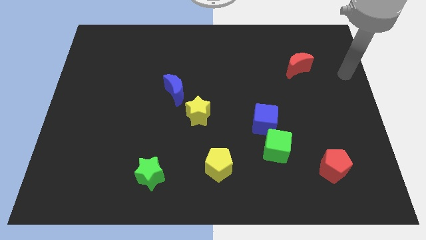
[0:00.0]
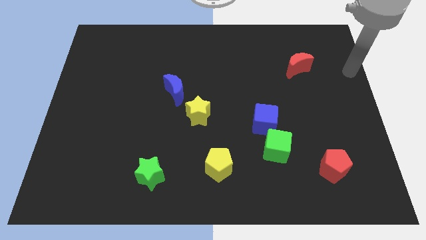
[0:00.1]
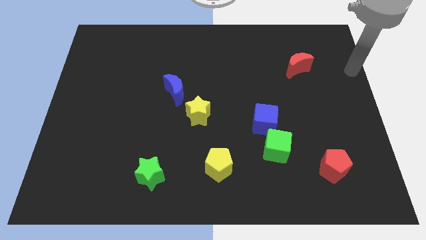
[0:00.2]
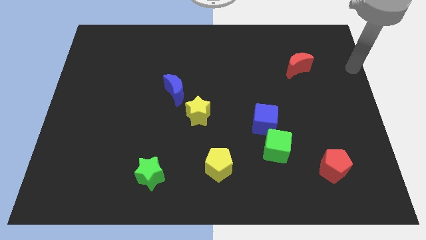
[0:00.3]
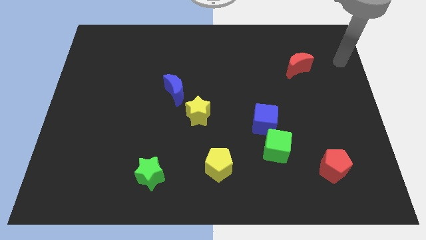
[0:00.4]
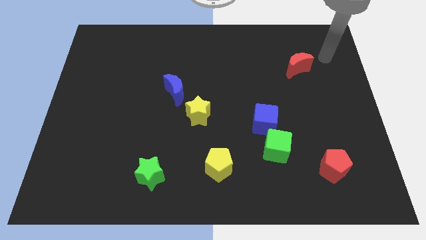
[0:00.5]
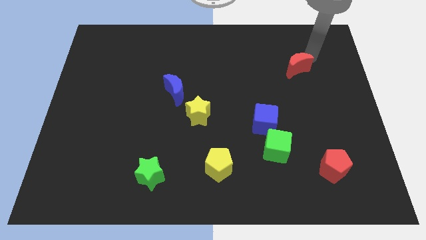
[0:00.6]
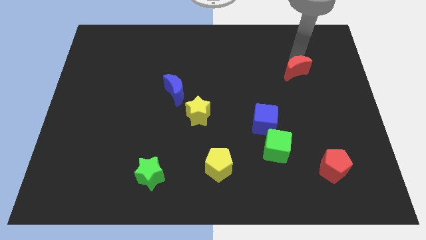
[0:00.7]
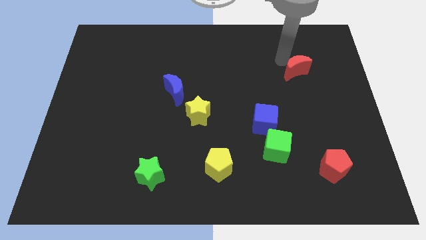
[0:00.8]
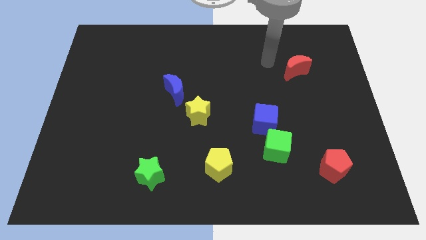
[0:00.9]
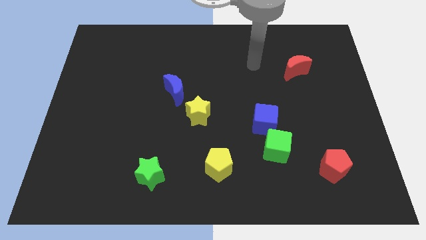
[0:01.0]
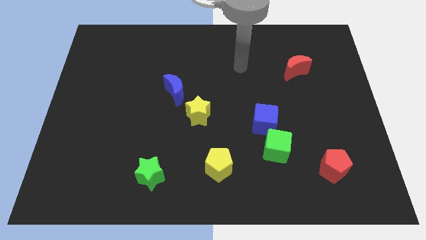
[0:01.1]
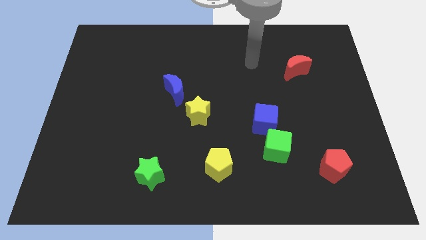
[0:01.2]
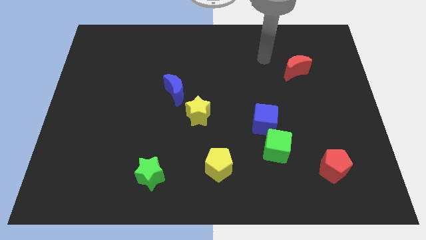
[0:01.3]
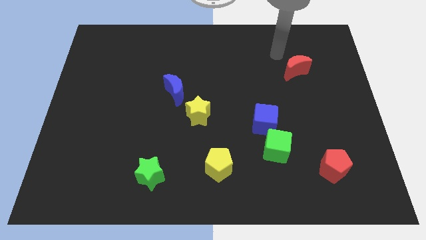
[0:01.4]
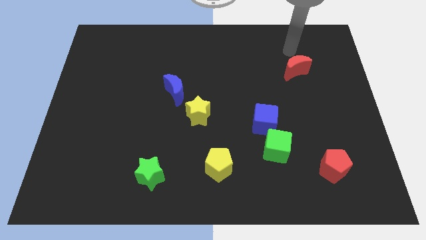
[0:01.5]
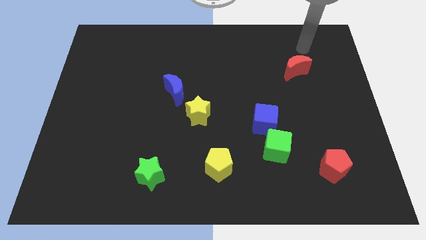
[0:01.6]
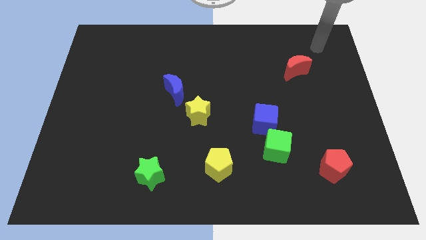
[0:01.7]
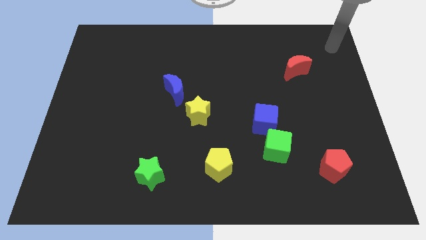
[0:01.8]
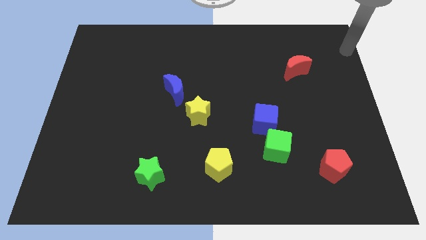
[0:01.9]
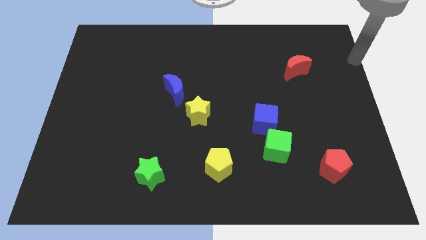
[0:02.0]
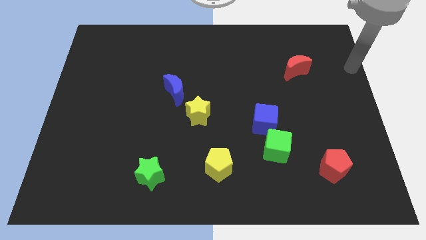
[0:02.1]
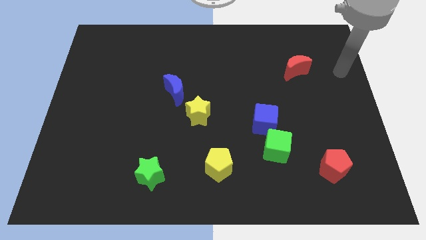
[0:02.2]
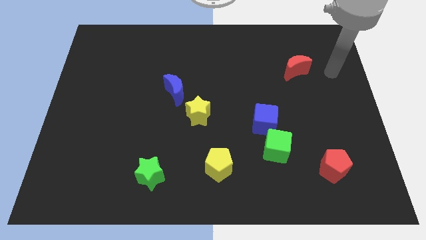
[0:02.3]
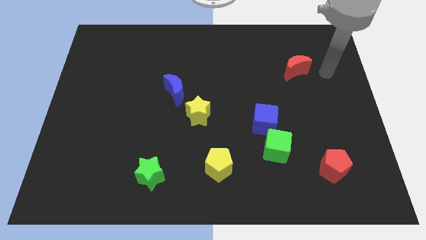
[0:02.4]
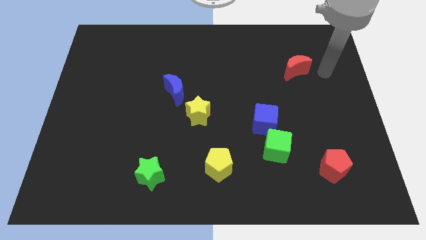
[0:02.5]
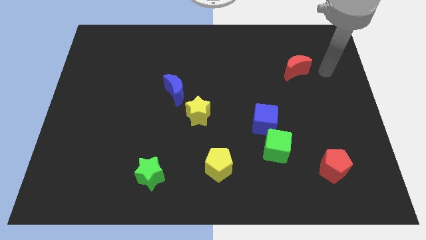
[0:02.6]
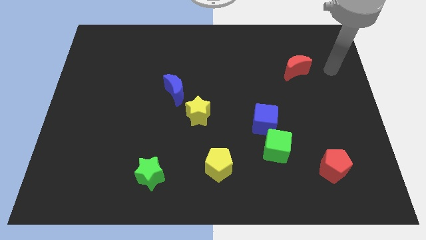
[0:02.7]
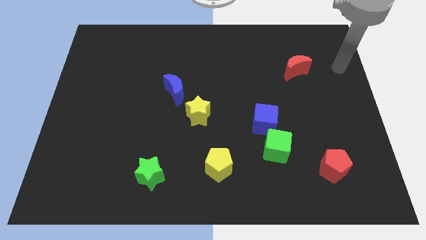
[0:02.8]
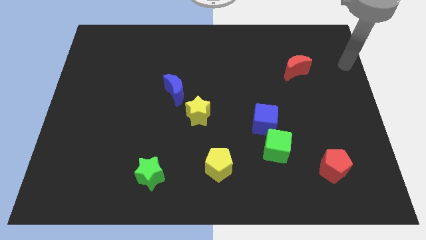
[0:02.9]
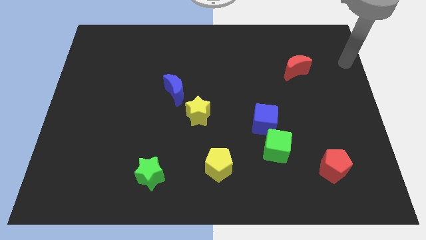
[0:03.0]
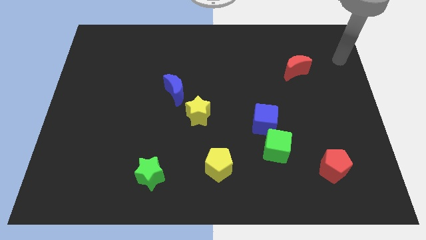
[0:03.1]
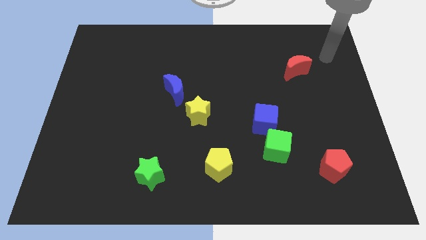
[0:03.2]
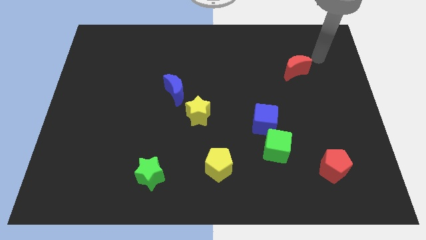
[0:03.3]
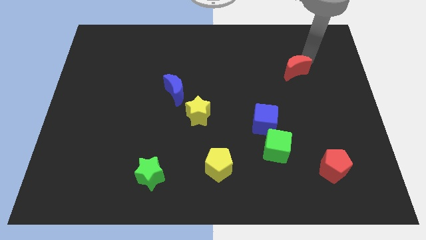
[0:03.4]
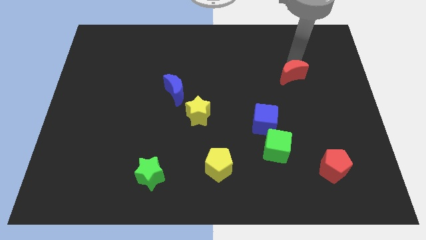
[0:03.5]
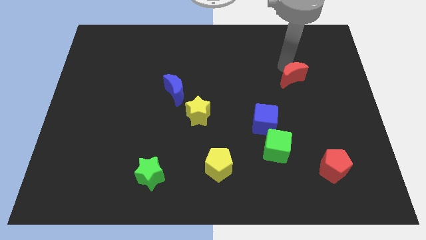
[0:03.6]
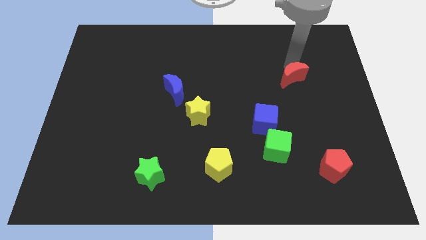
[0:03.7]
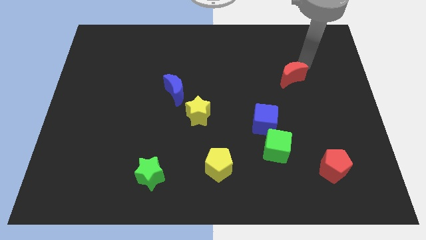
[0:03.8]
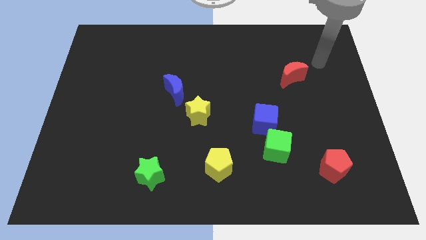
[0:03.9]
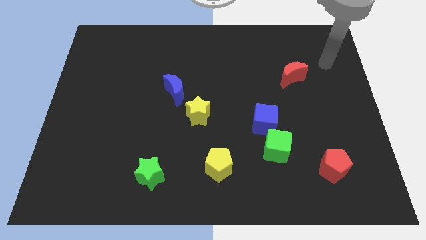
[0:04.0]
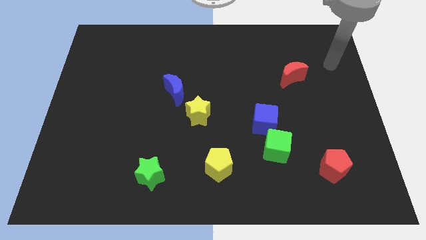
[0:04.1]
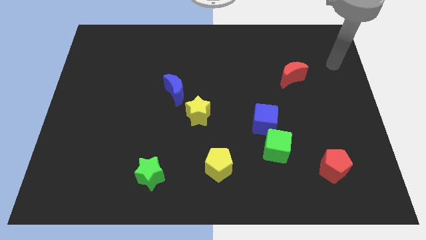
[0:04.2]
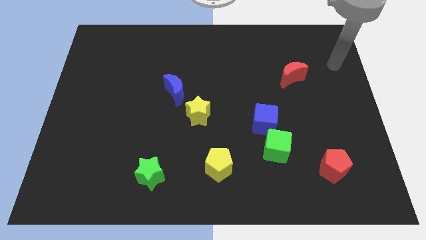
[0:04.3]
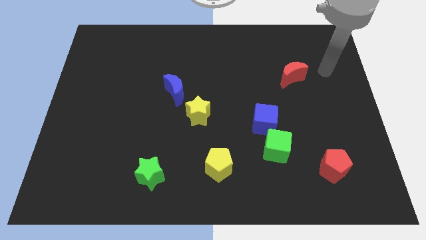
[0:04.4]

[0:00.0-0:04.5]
tap at the top side of the red crescent

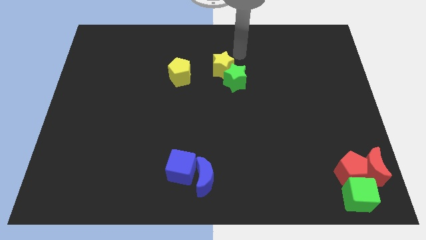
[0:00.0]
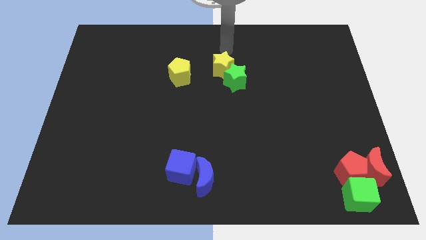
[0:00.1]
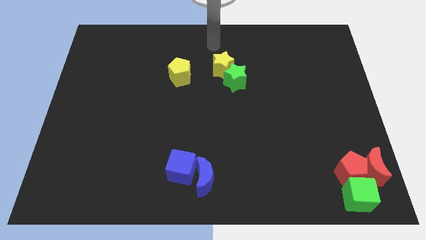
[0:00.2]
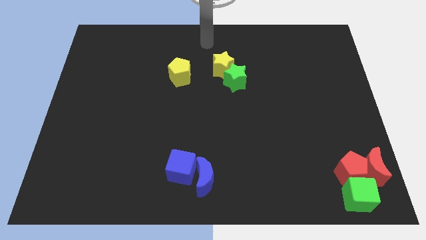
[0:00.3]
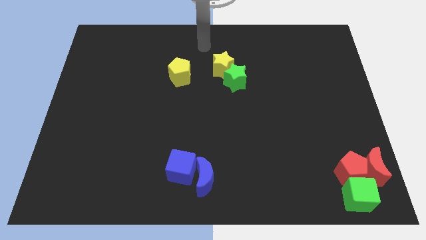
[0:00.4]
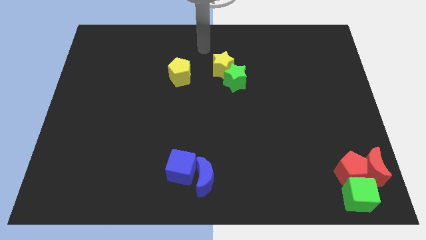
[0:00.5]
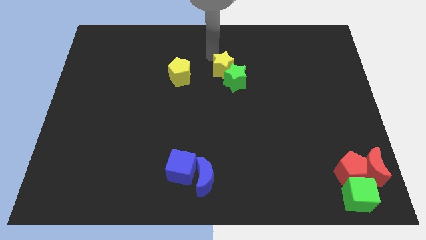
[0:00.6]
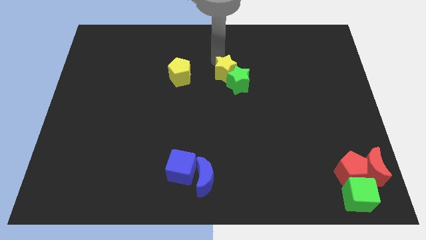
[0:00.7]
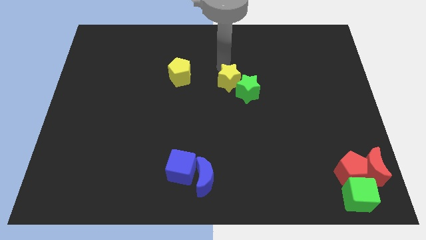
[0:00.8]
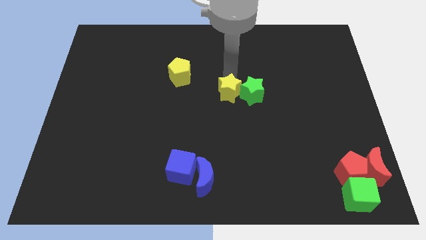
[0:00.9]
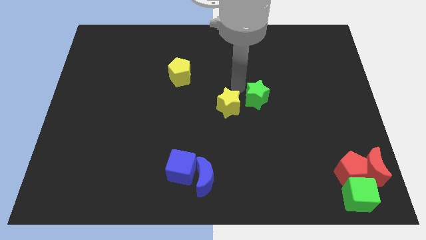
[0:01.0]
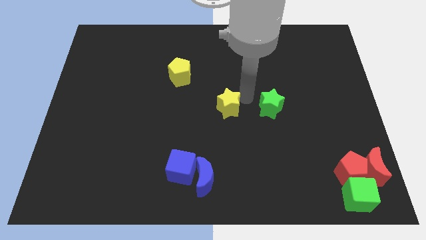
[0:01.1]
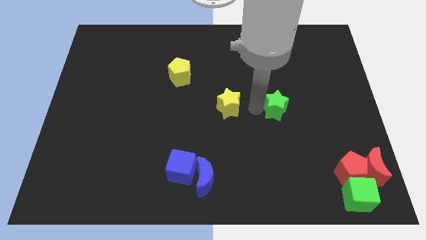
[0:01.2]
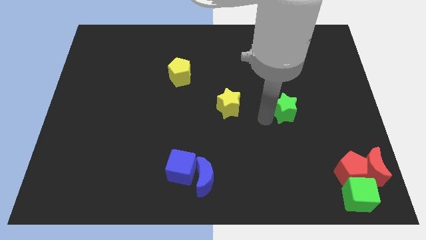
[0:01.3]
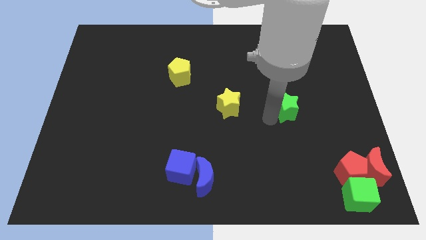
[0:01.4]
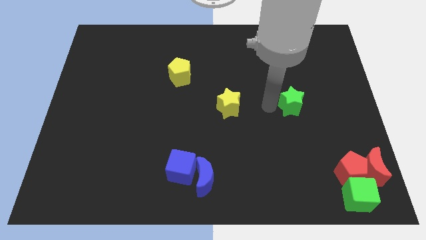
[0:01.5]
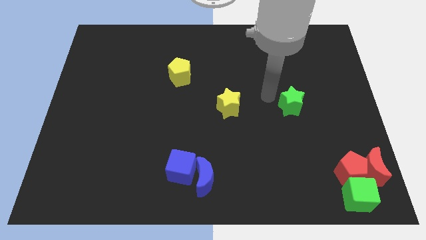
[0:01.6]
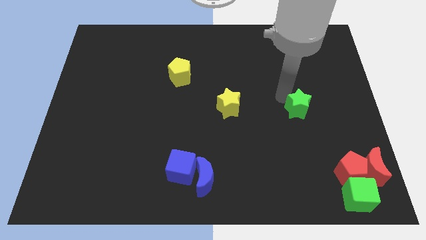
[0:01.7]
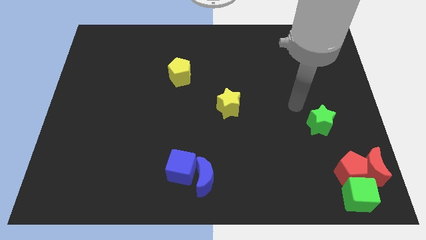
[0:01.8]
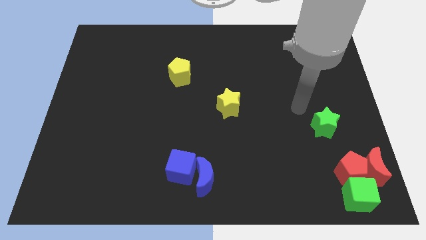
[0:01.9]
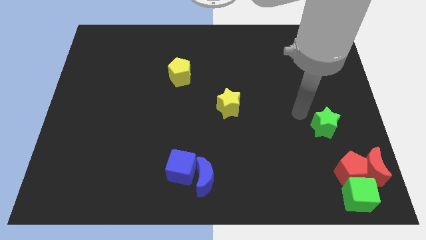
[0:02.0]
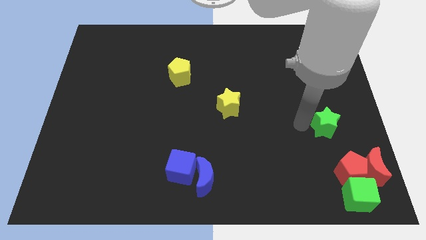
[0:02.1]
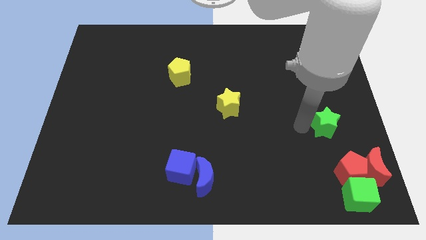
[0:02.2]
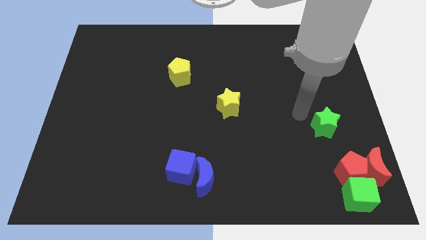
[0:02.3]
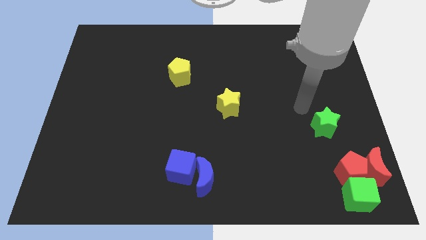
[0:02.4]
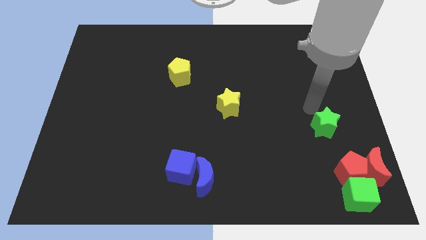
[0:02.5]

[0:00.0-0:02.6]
push the green star towards right side of the board

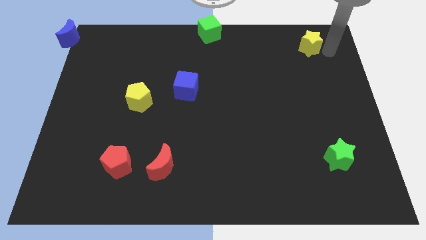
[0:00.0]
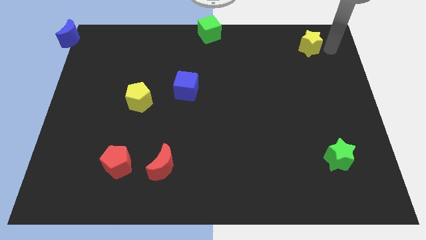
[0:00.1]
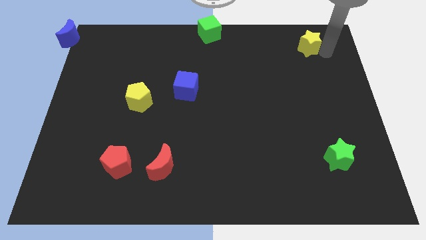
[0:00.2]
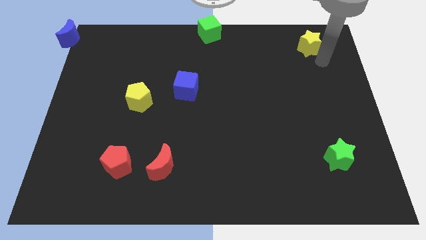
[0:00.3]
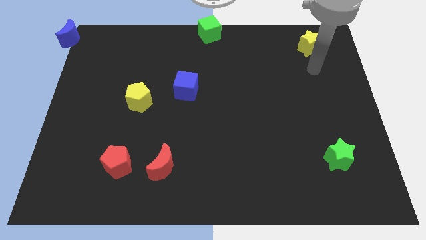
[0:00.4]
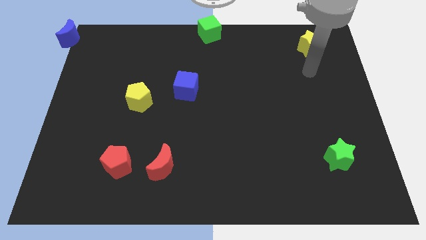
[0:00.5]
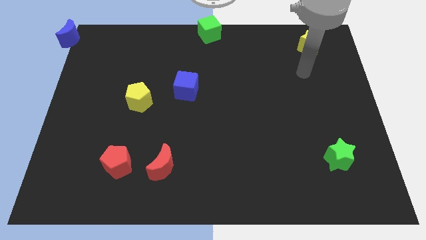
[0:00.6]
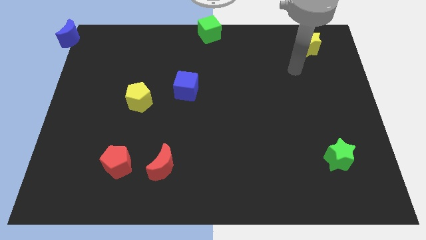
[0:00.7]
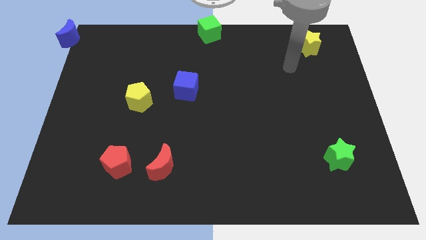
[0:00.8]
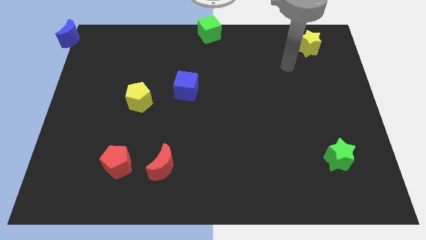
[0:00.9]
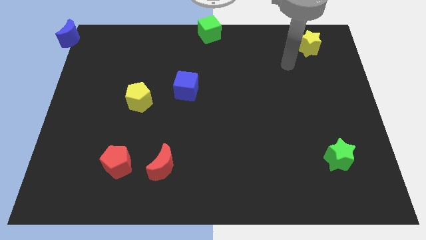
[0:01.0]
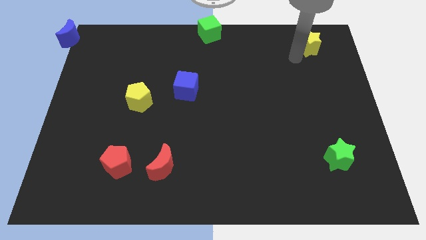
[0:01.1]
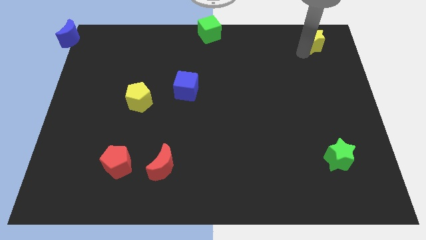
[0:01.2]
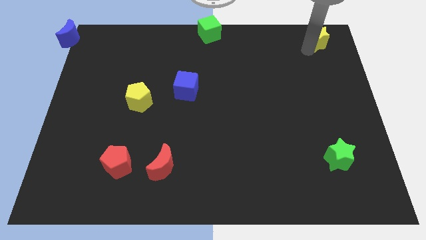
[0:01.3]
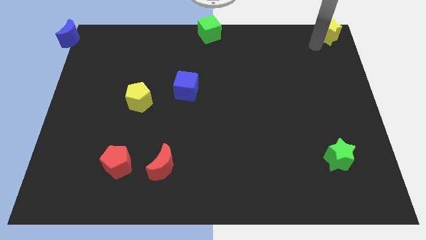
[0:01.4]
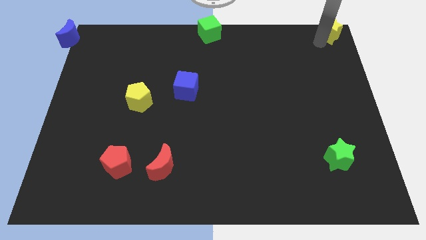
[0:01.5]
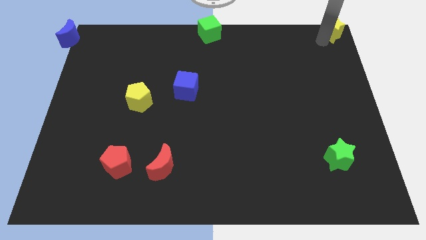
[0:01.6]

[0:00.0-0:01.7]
move the yellow star to the top right corner
